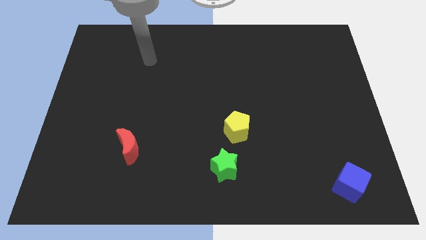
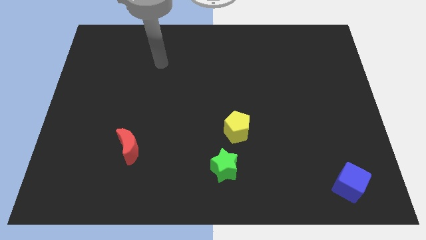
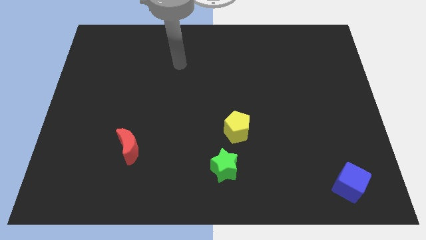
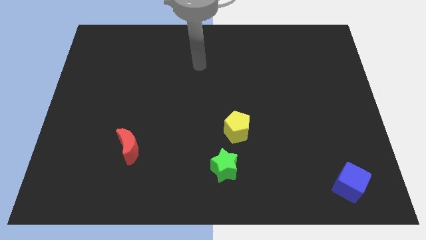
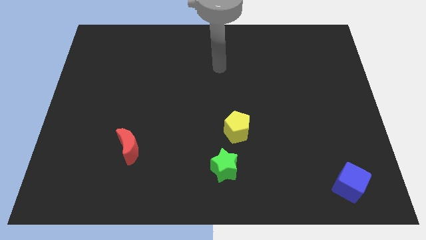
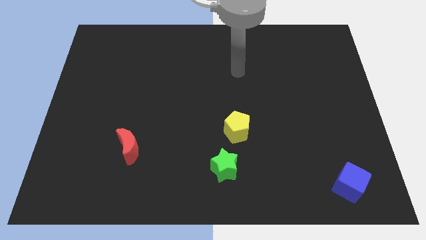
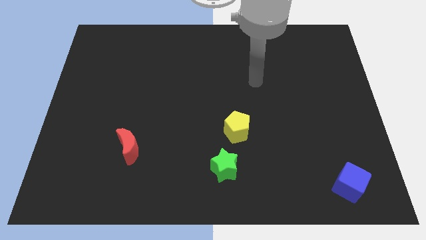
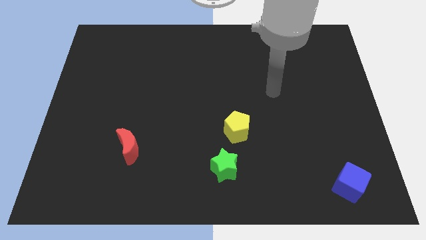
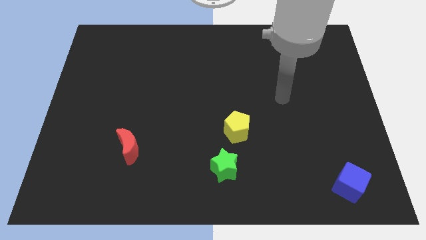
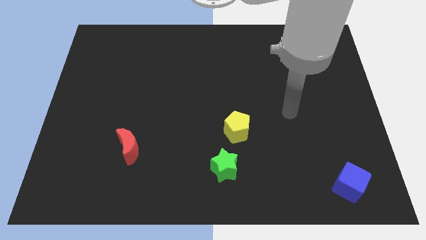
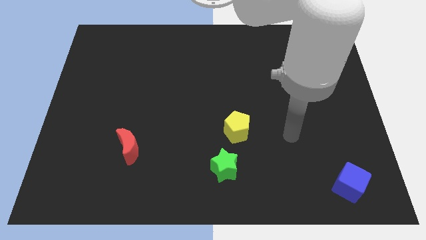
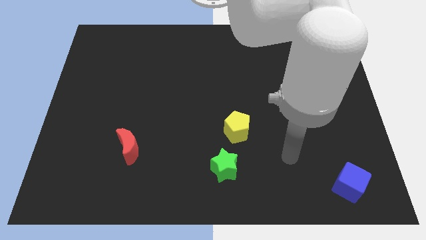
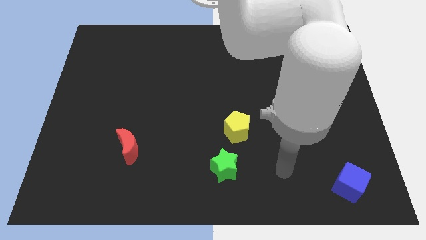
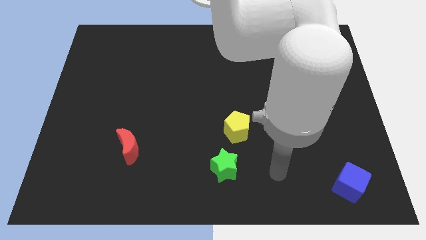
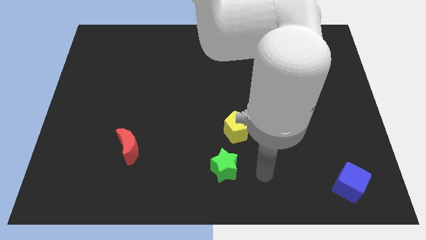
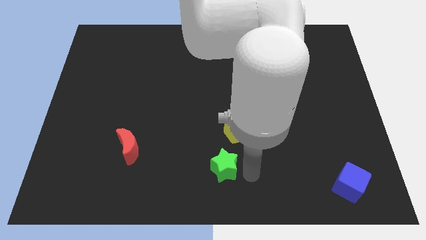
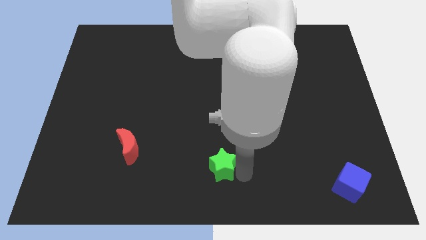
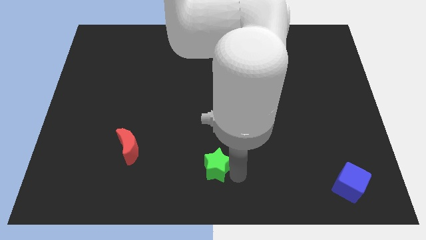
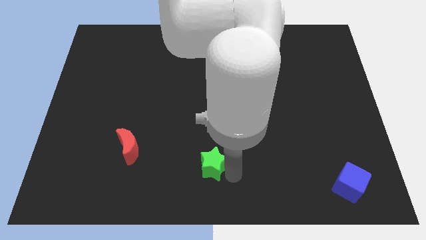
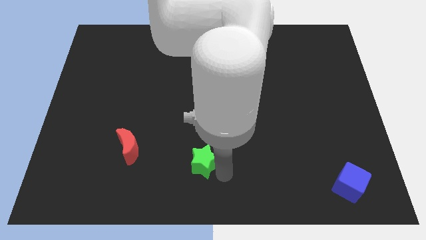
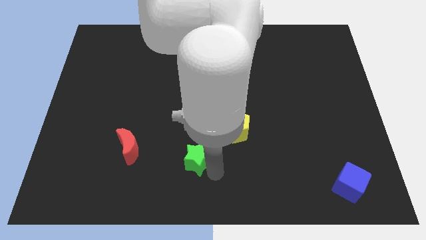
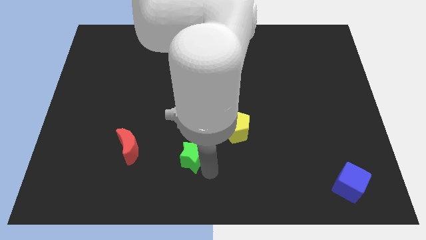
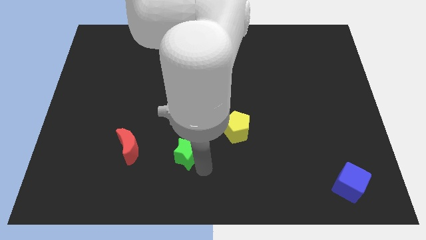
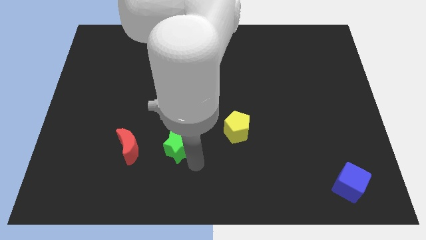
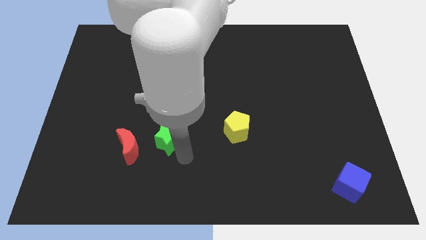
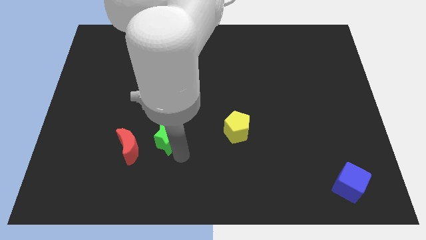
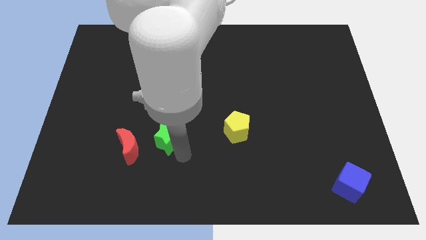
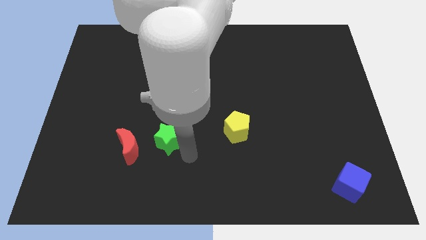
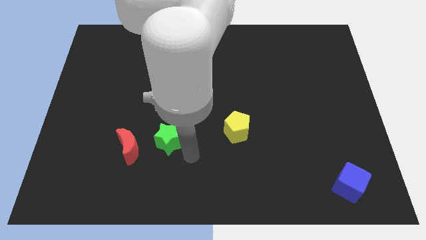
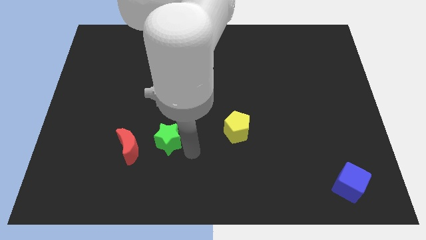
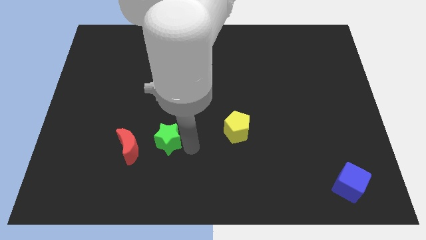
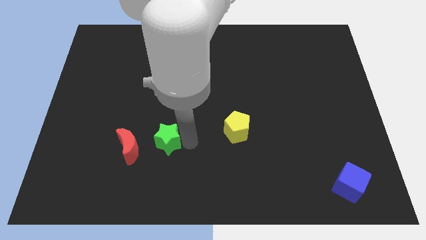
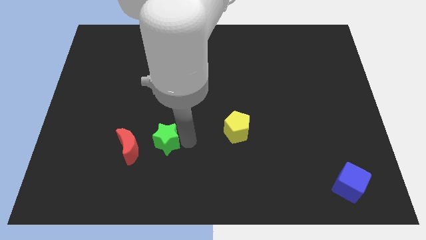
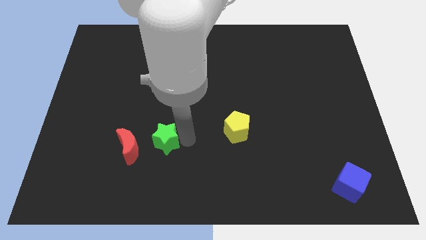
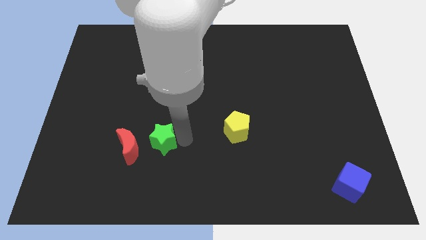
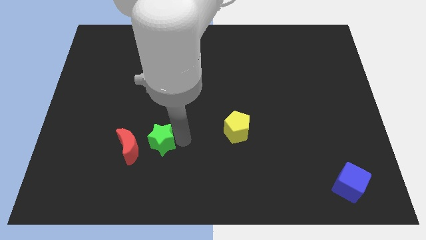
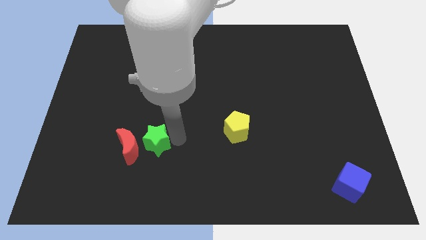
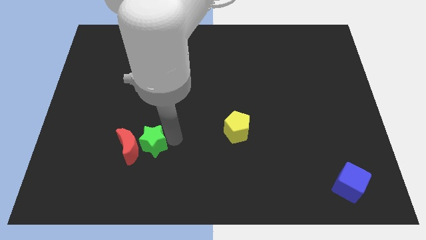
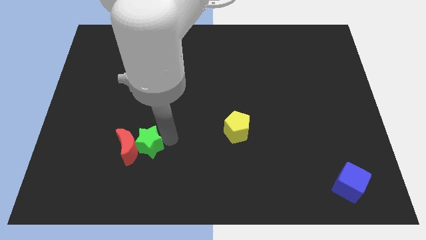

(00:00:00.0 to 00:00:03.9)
move the green star to the moon

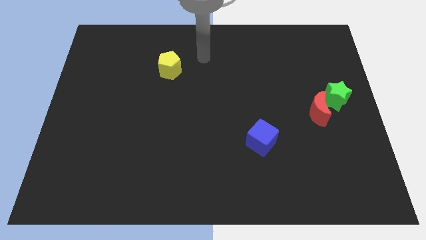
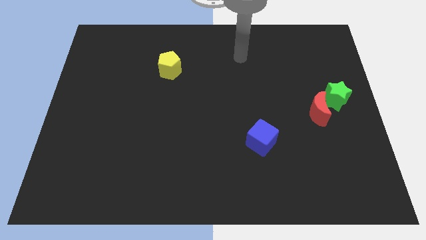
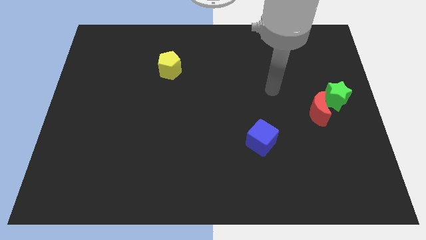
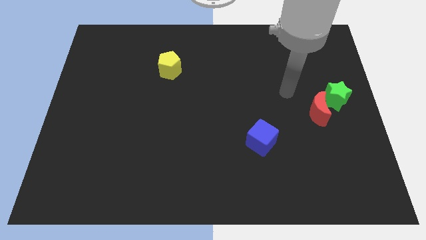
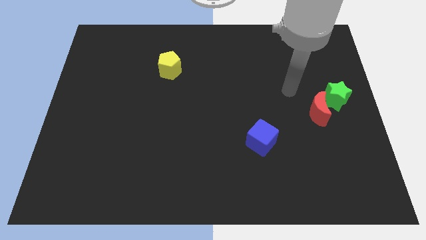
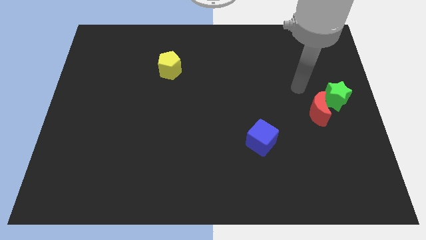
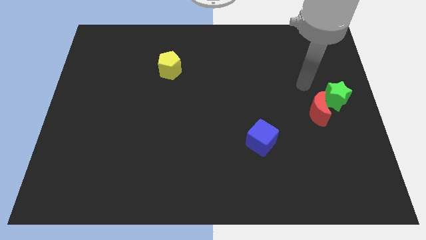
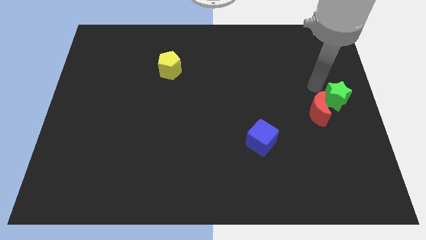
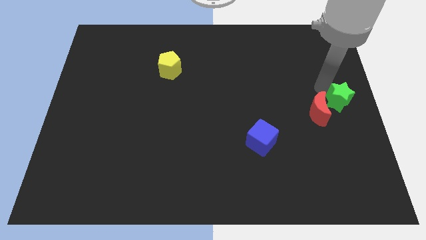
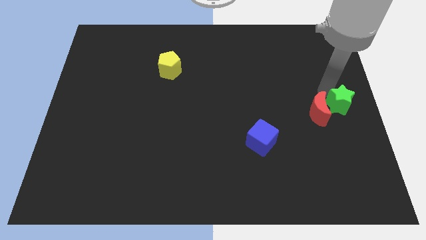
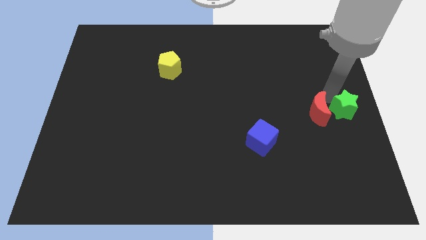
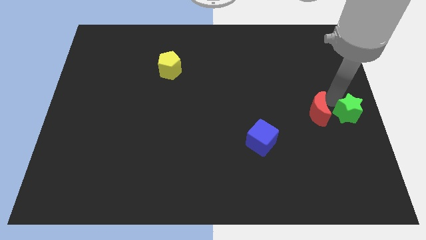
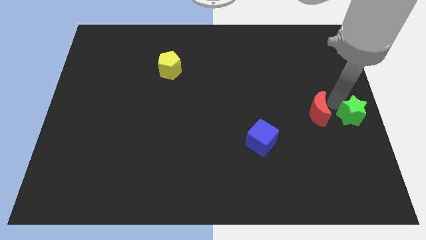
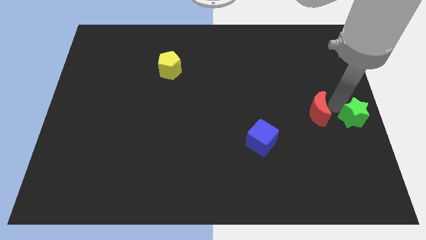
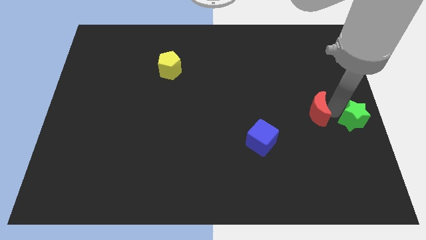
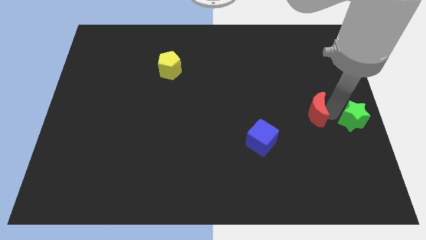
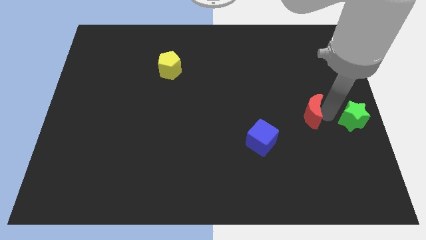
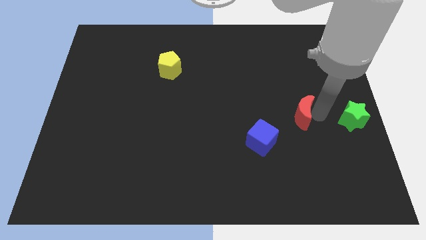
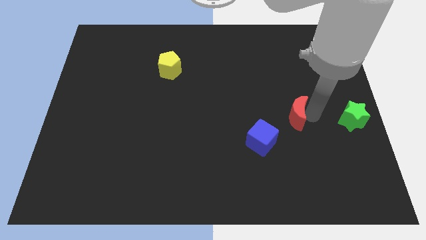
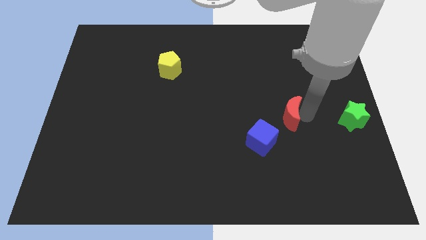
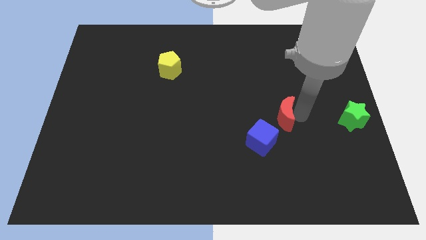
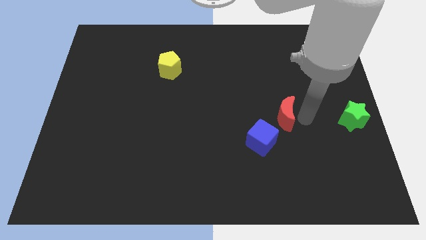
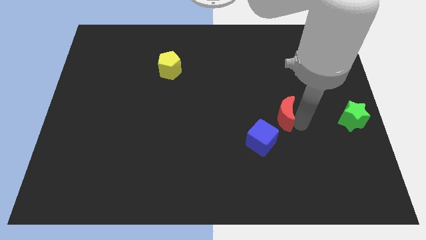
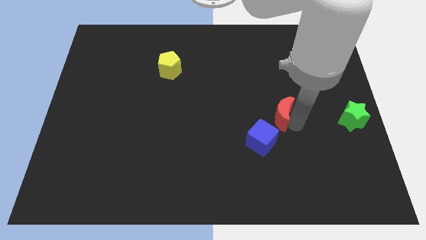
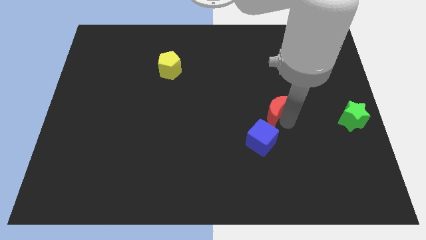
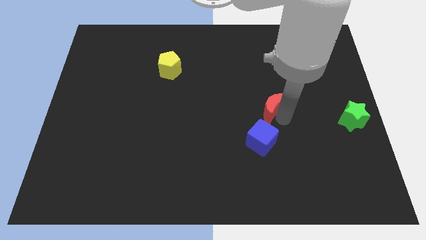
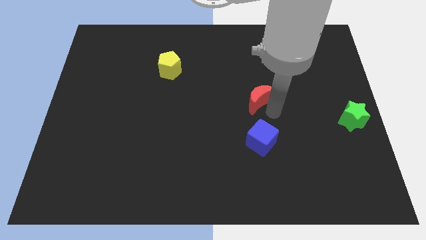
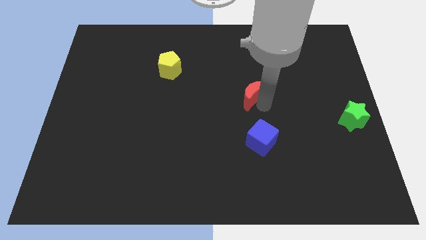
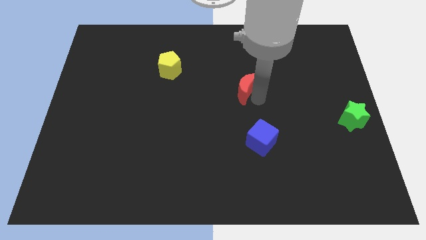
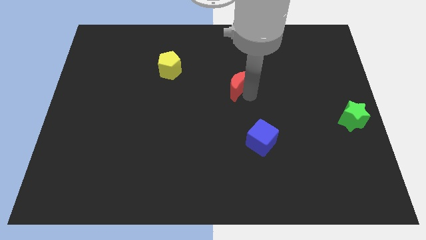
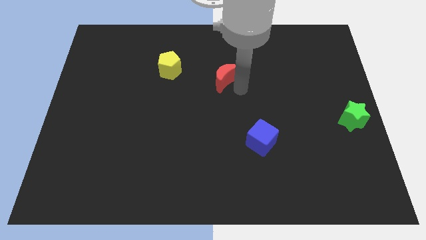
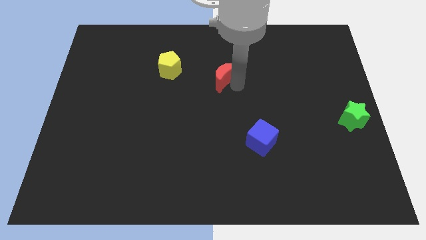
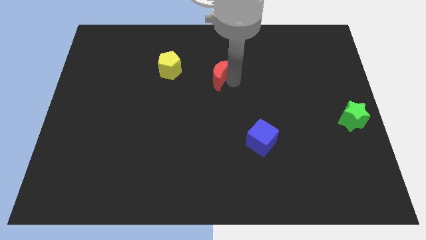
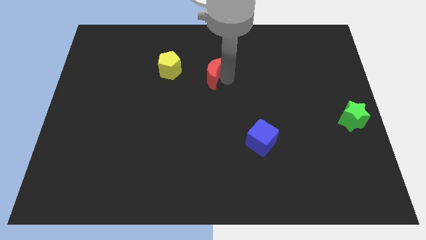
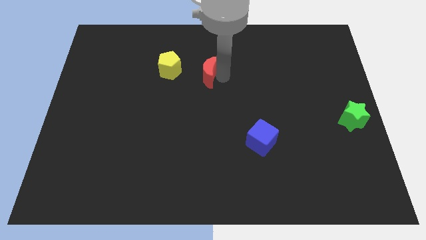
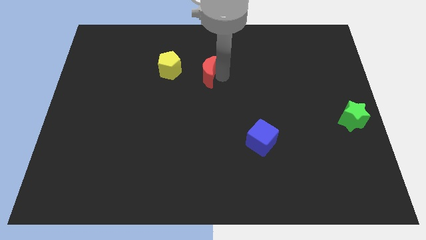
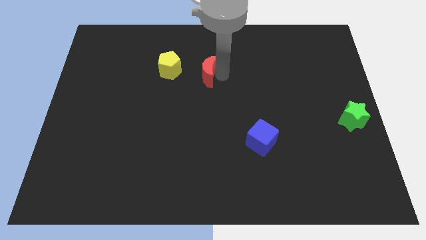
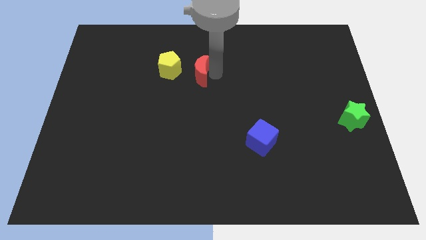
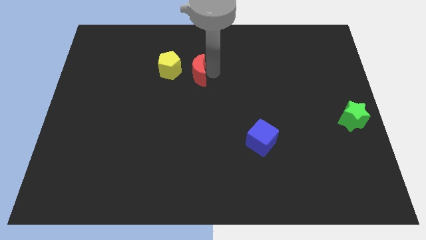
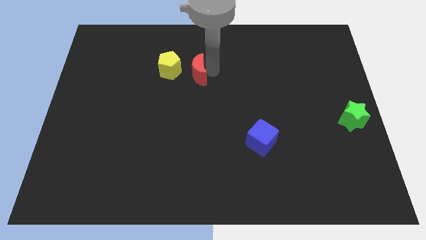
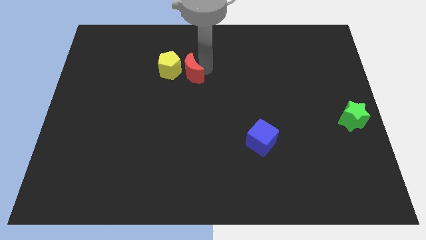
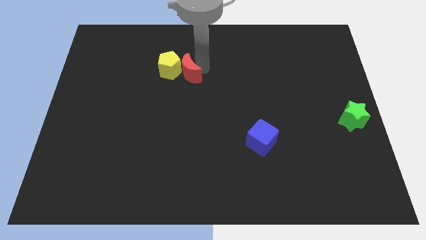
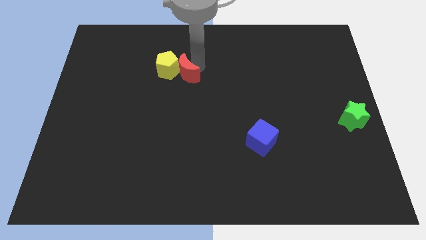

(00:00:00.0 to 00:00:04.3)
push the red block close to the yellow pentagon

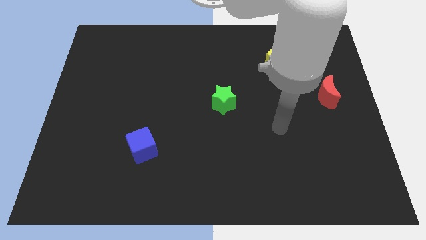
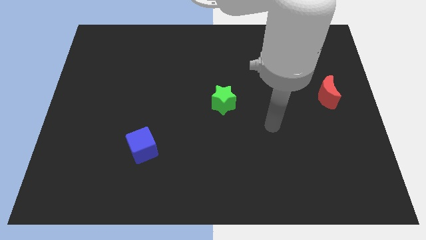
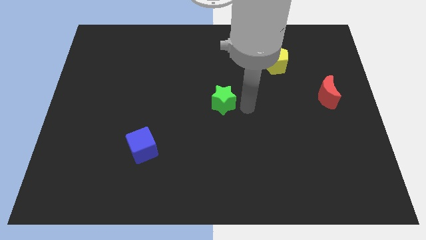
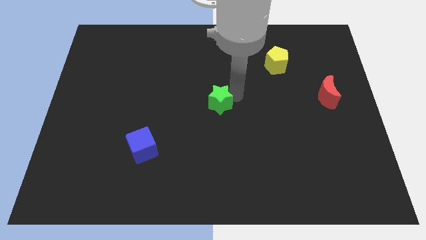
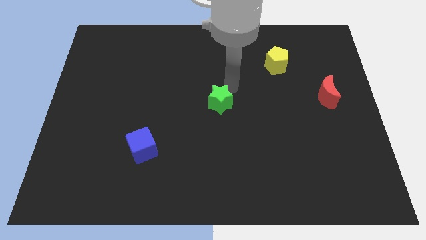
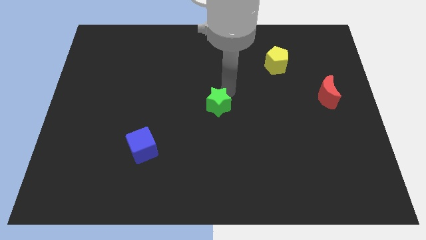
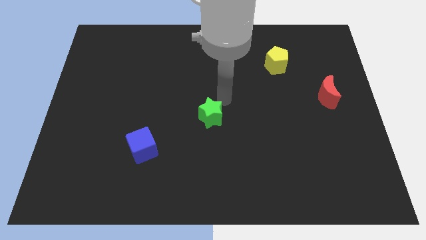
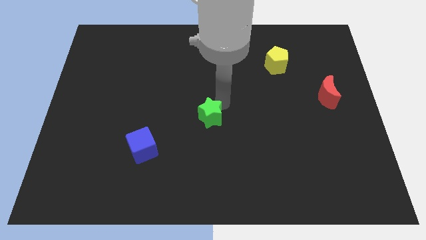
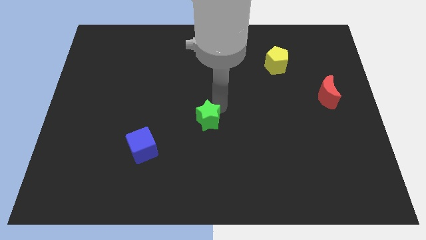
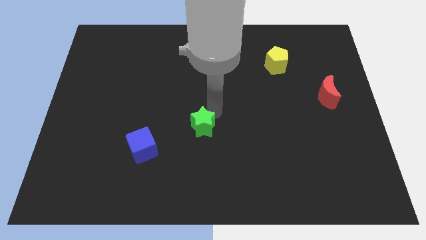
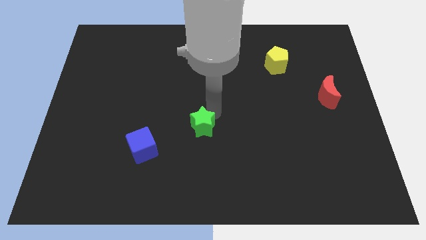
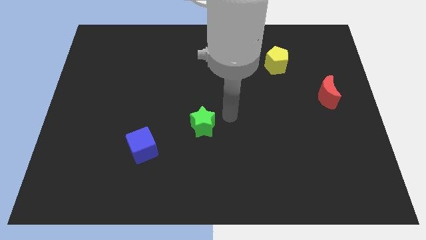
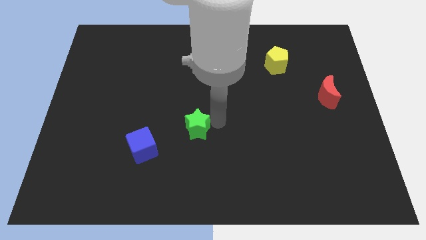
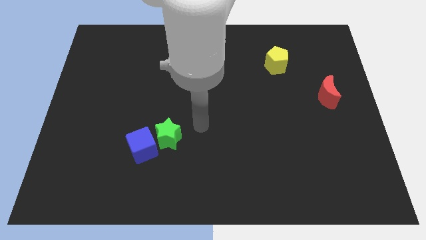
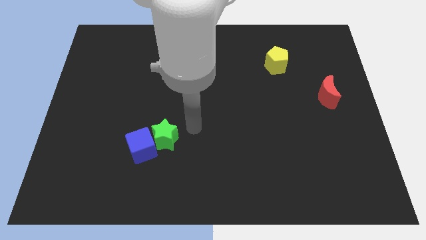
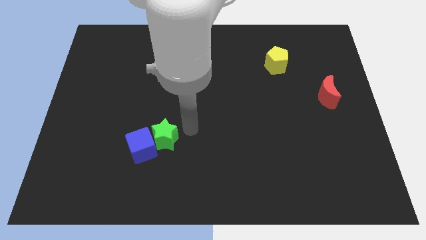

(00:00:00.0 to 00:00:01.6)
slide the green block next to the blue block
